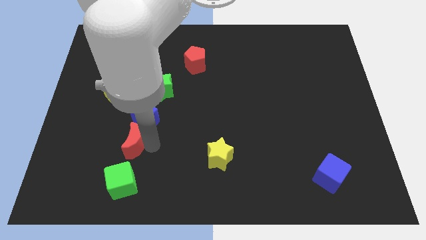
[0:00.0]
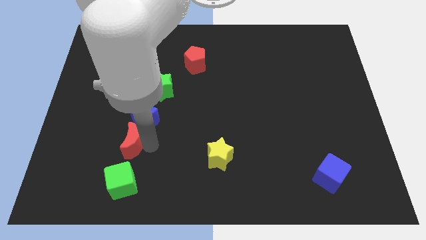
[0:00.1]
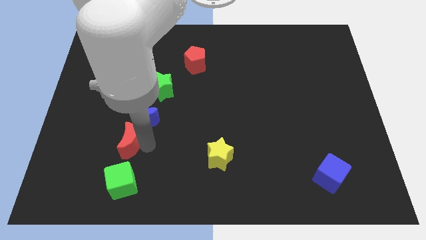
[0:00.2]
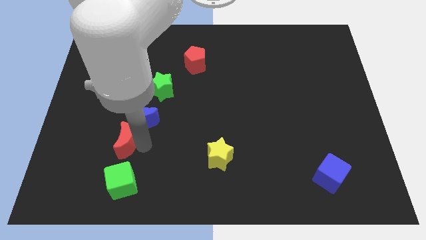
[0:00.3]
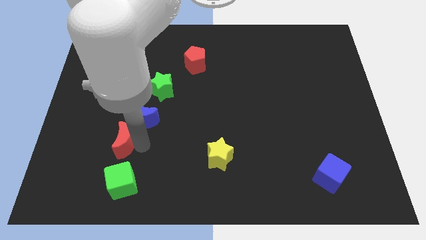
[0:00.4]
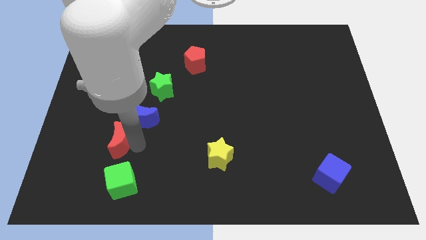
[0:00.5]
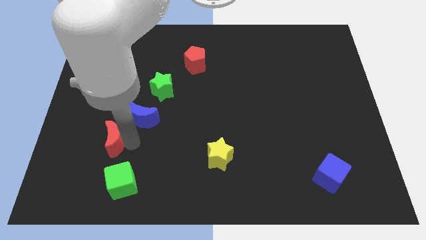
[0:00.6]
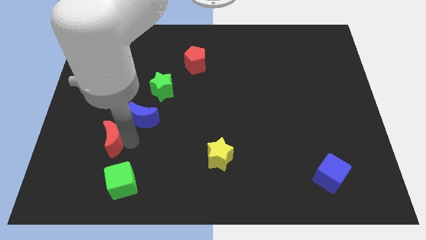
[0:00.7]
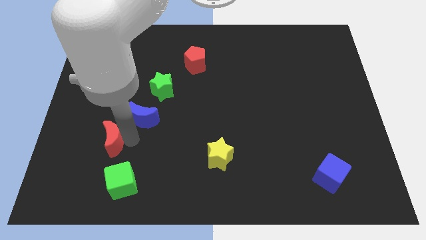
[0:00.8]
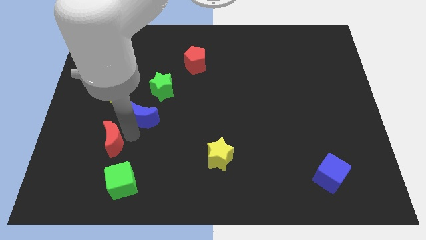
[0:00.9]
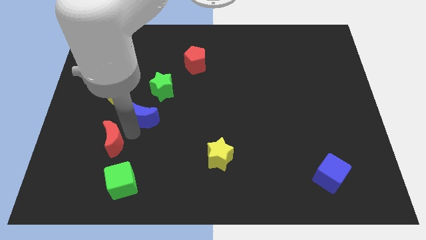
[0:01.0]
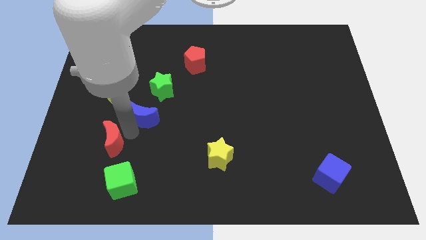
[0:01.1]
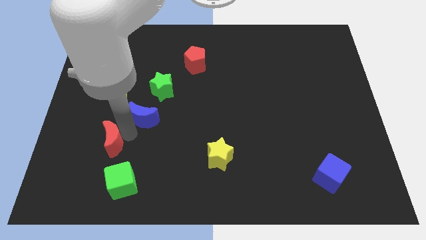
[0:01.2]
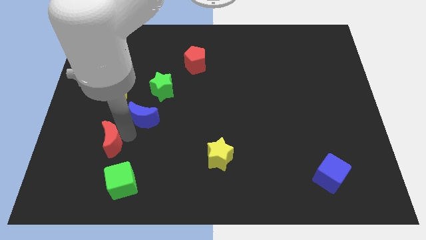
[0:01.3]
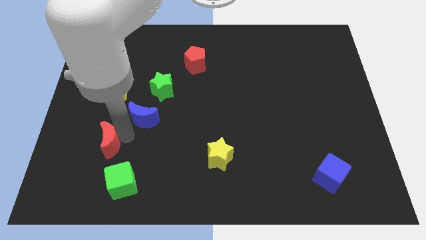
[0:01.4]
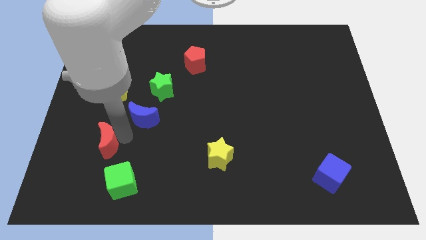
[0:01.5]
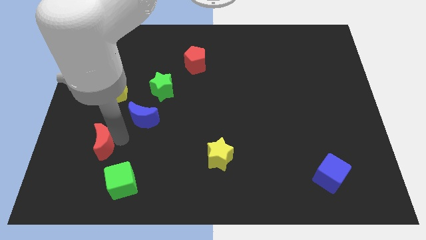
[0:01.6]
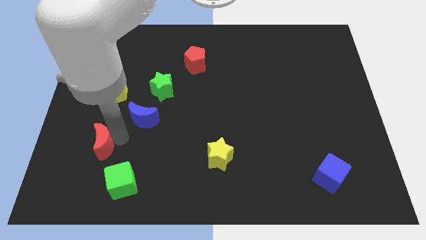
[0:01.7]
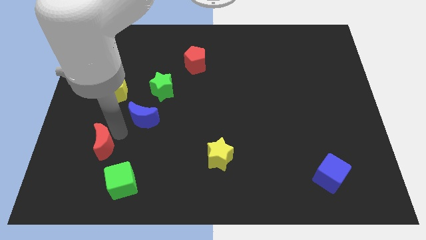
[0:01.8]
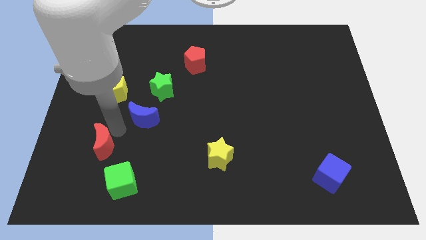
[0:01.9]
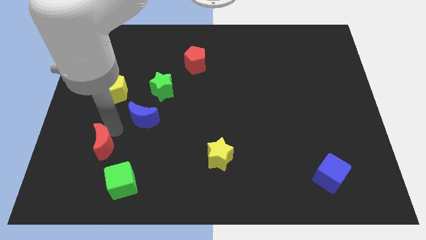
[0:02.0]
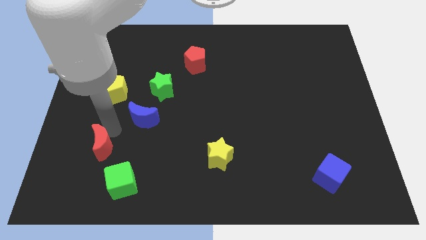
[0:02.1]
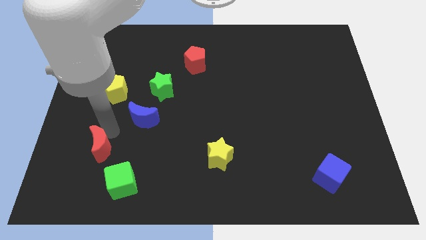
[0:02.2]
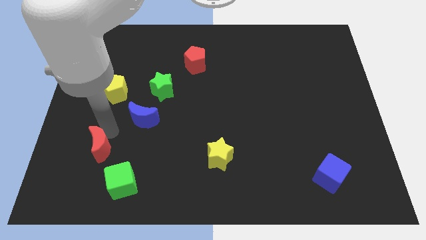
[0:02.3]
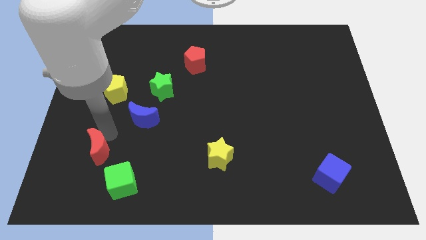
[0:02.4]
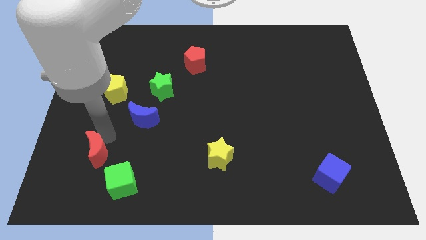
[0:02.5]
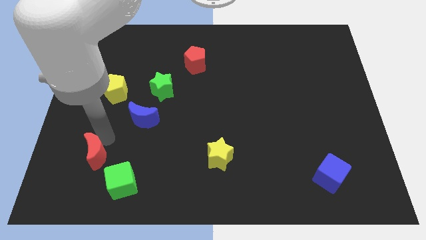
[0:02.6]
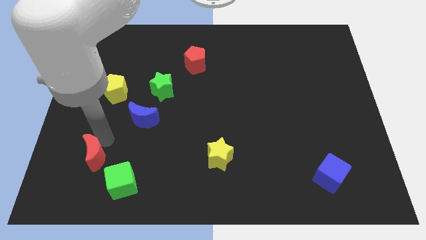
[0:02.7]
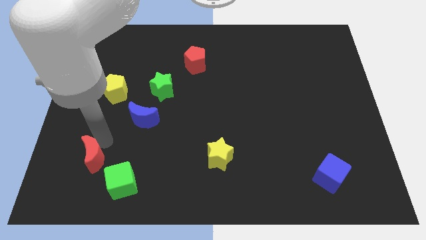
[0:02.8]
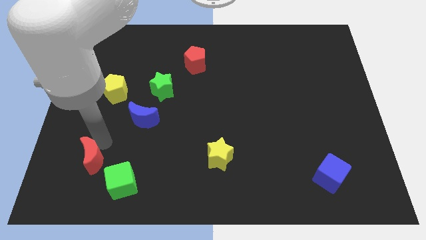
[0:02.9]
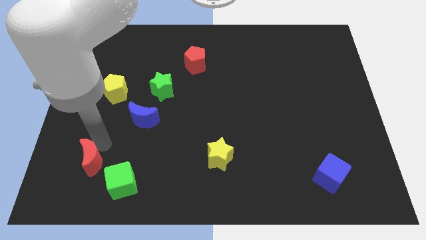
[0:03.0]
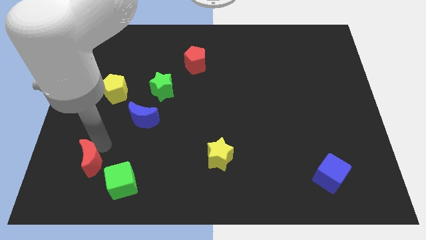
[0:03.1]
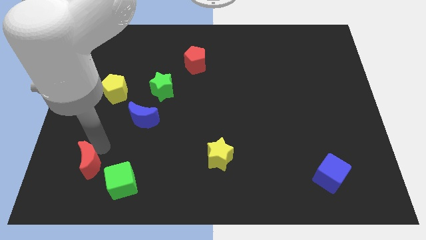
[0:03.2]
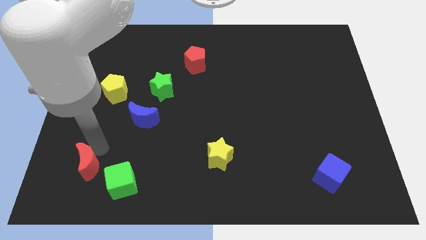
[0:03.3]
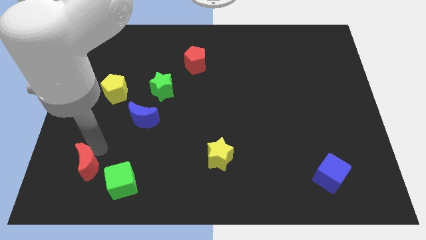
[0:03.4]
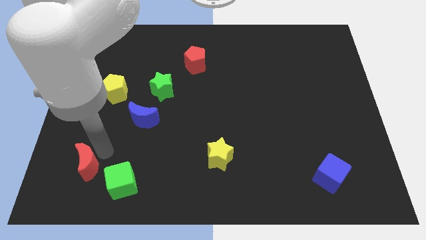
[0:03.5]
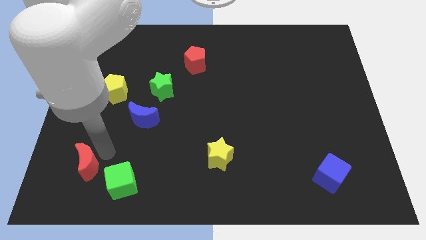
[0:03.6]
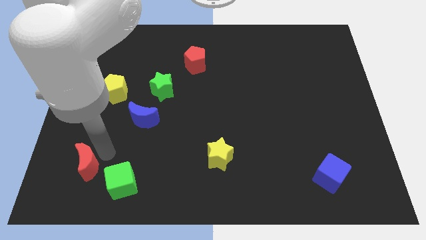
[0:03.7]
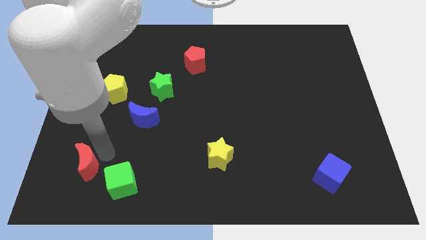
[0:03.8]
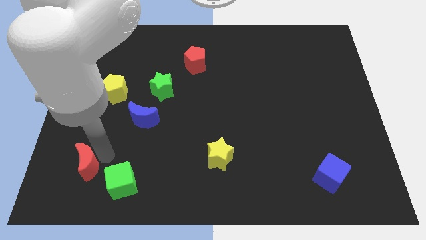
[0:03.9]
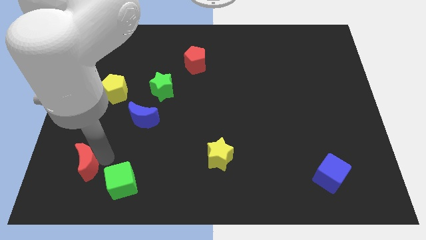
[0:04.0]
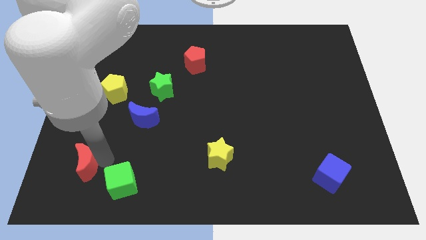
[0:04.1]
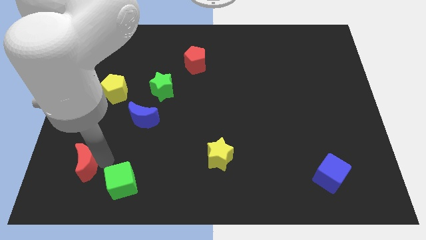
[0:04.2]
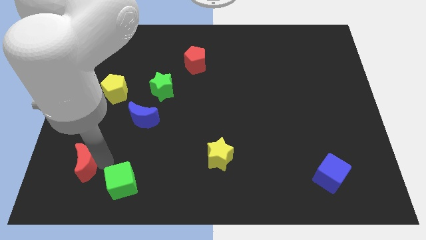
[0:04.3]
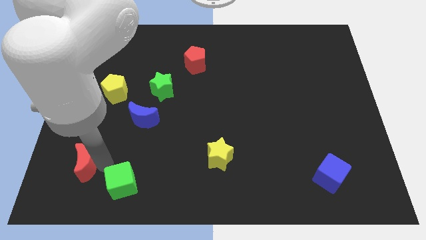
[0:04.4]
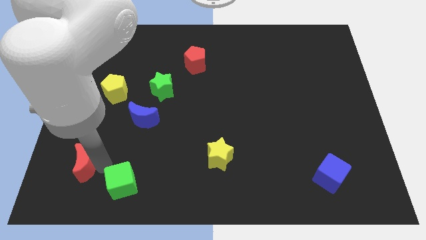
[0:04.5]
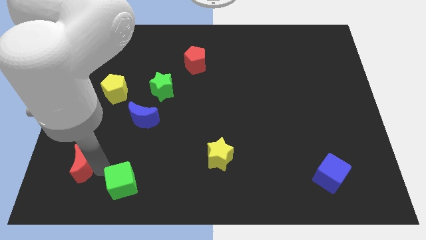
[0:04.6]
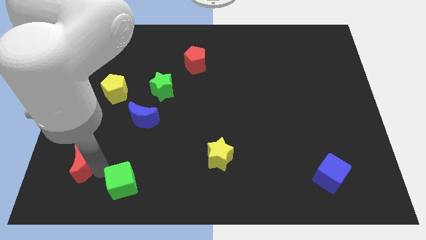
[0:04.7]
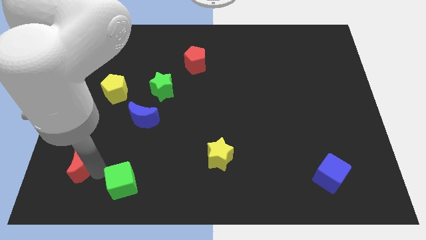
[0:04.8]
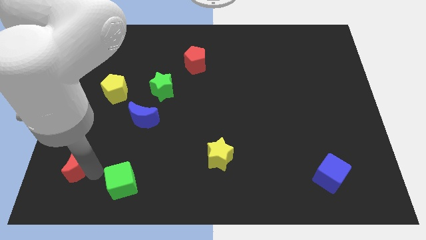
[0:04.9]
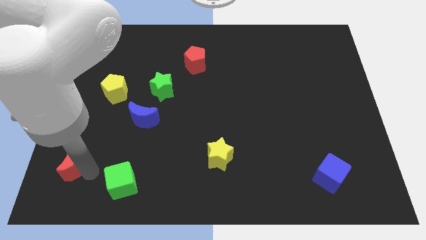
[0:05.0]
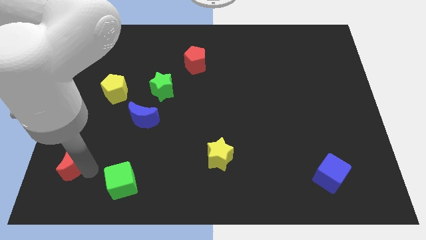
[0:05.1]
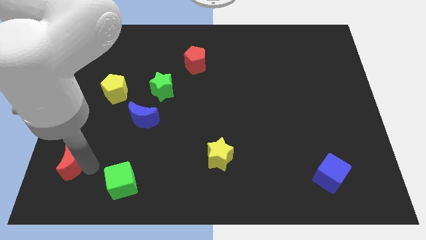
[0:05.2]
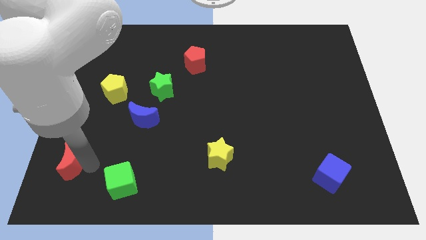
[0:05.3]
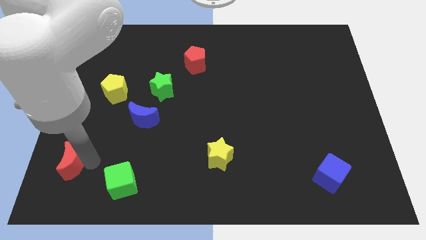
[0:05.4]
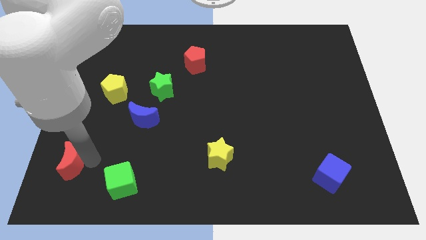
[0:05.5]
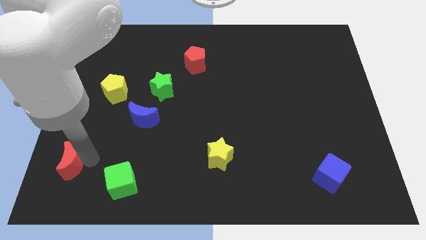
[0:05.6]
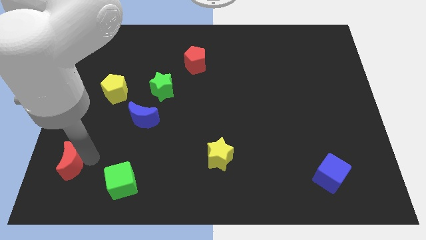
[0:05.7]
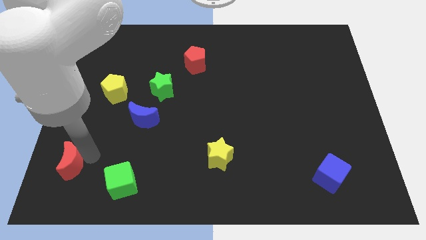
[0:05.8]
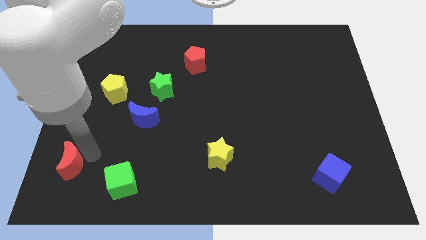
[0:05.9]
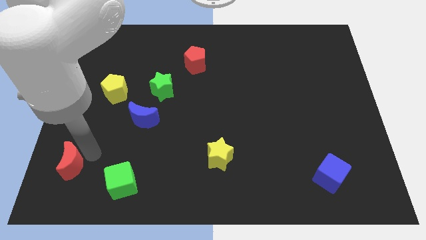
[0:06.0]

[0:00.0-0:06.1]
move the red moon away from the middle of blue moon and green cube

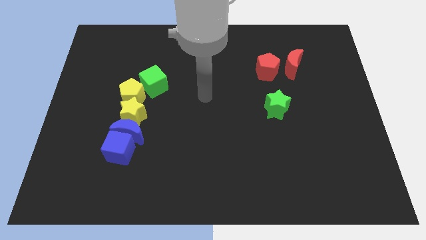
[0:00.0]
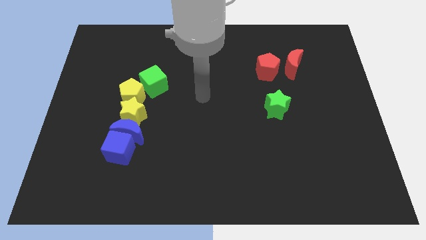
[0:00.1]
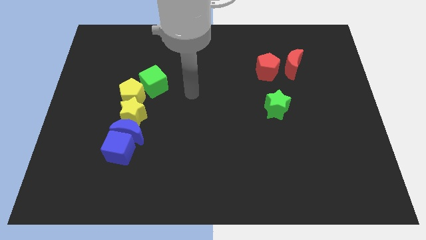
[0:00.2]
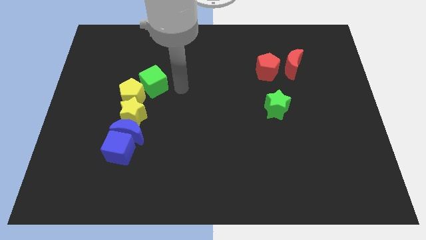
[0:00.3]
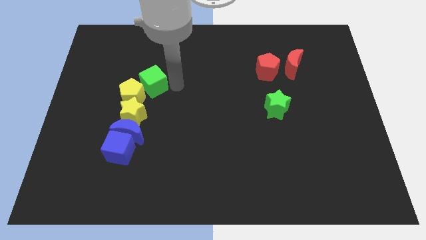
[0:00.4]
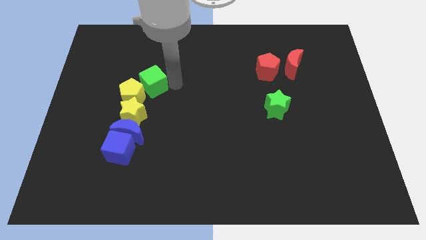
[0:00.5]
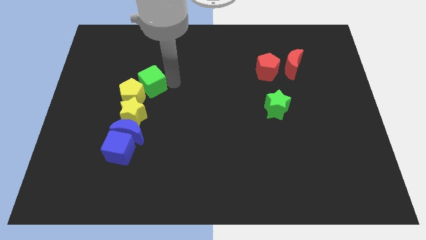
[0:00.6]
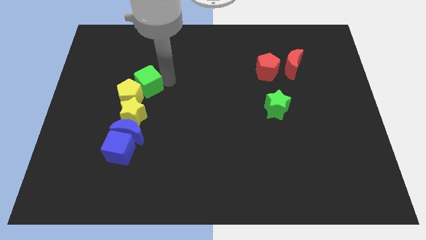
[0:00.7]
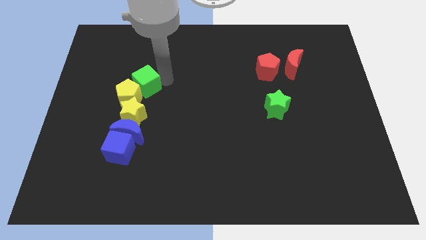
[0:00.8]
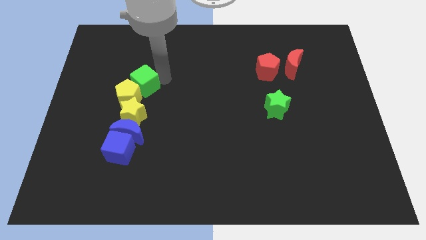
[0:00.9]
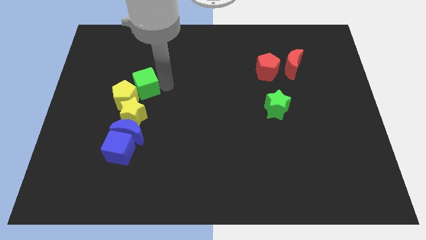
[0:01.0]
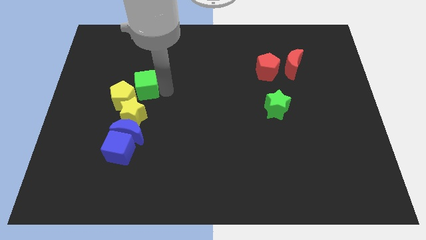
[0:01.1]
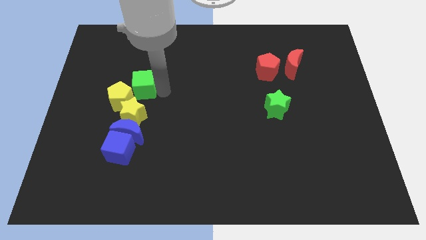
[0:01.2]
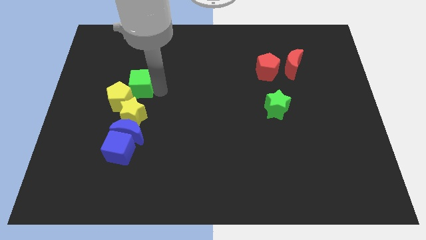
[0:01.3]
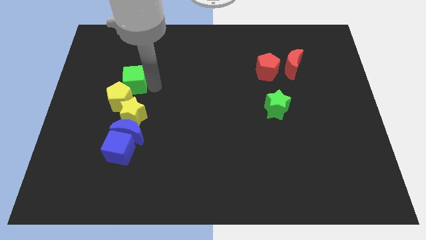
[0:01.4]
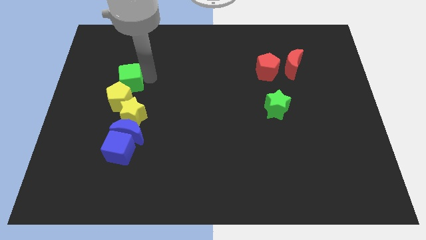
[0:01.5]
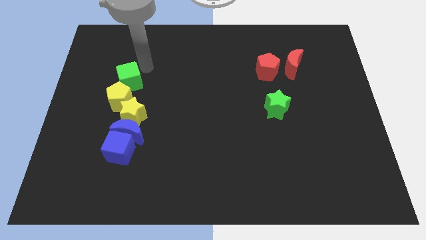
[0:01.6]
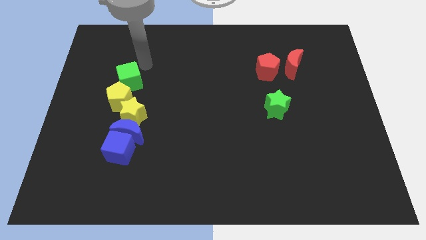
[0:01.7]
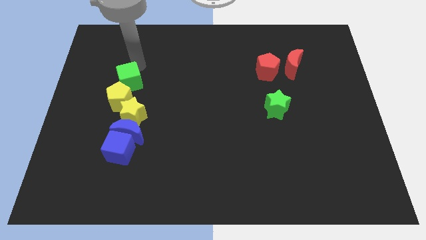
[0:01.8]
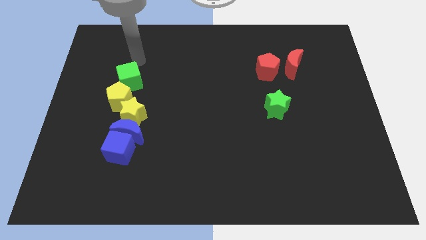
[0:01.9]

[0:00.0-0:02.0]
drag the green cube slightly towards left

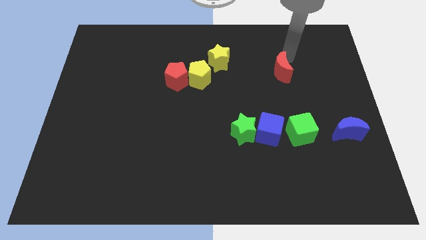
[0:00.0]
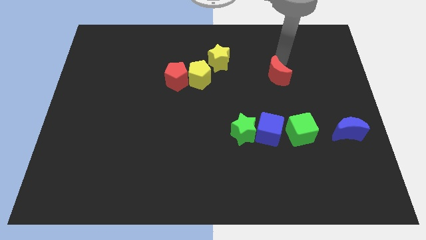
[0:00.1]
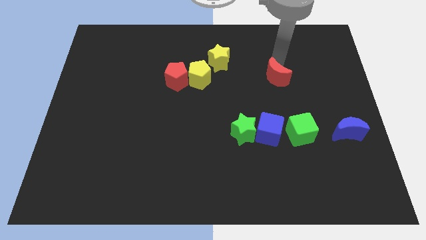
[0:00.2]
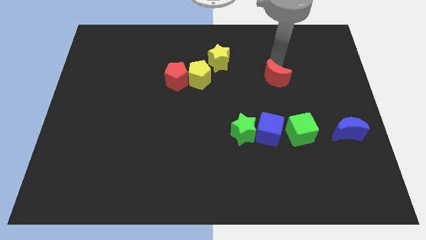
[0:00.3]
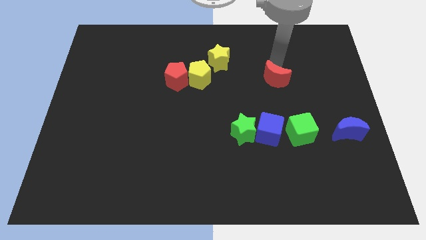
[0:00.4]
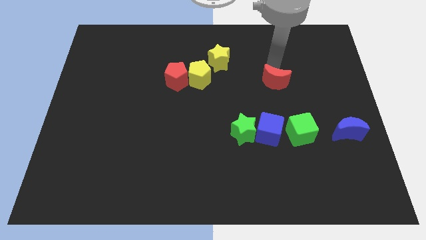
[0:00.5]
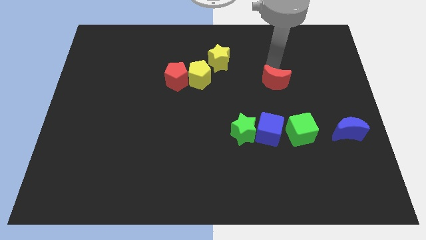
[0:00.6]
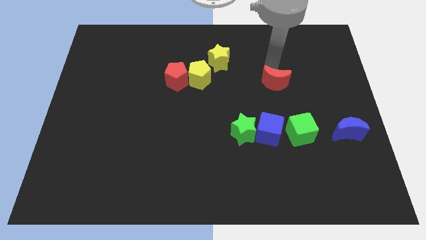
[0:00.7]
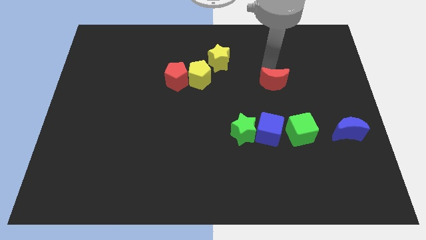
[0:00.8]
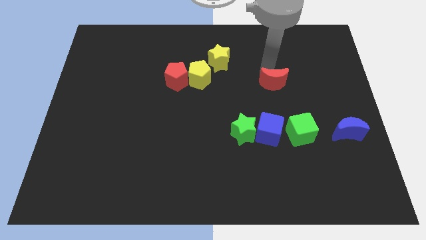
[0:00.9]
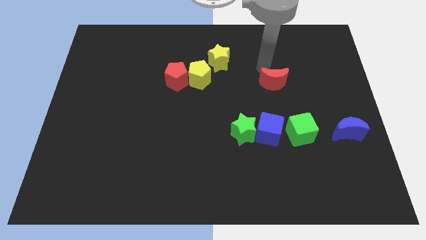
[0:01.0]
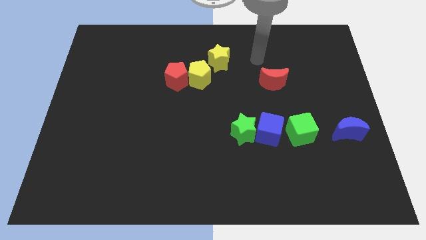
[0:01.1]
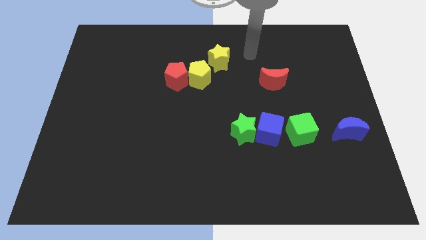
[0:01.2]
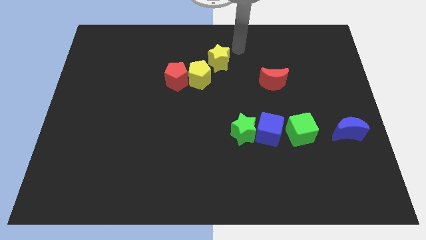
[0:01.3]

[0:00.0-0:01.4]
slightly push down the red crescent
